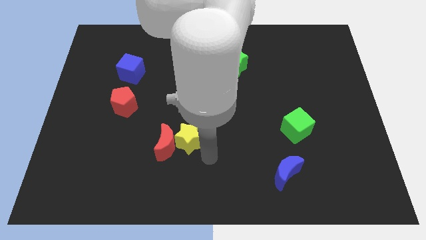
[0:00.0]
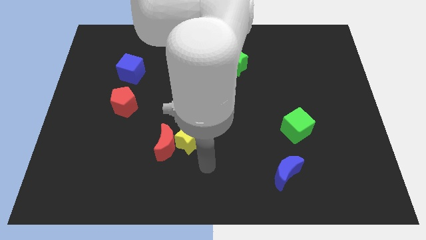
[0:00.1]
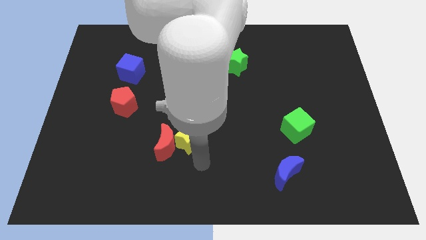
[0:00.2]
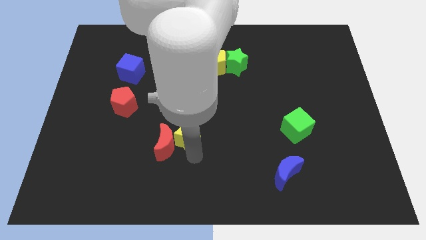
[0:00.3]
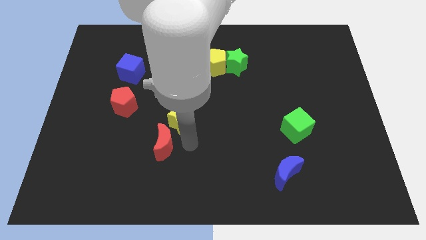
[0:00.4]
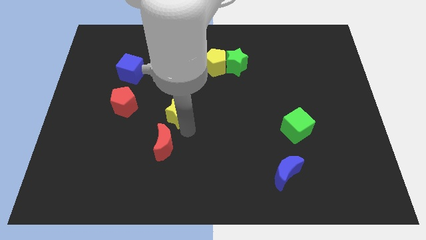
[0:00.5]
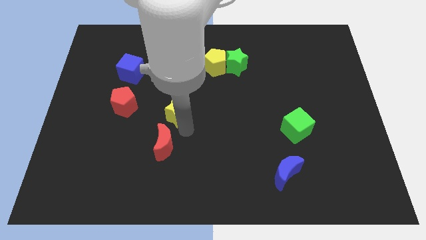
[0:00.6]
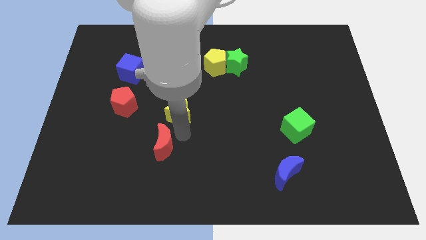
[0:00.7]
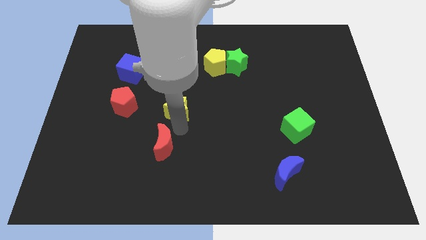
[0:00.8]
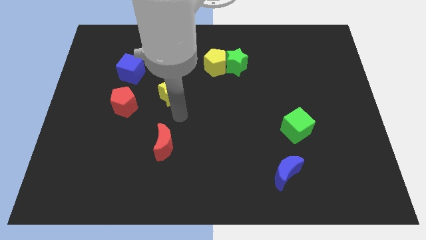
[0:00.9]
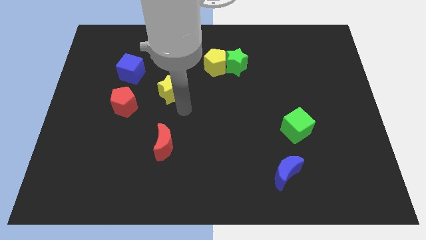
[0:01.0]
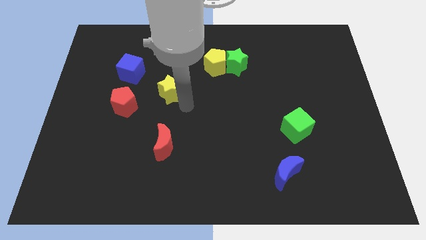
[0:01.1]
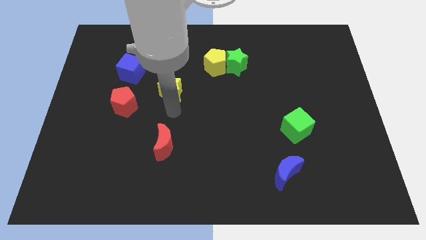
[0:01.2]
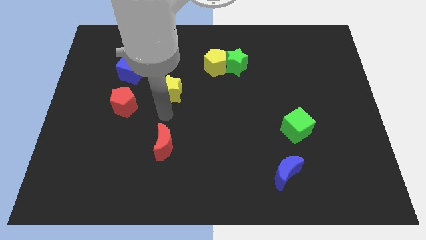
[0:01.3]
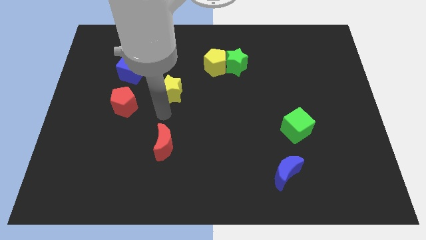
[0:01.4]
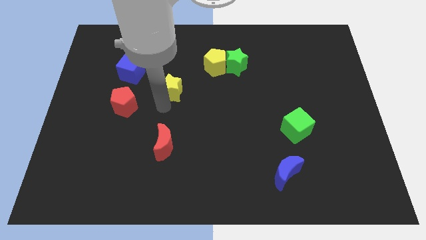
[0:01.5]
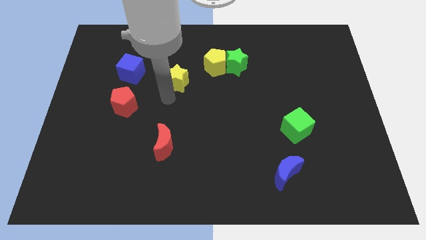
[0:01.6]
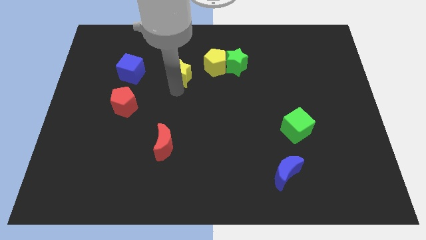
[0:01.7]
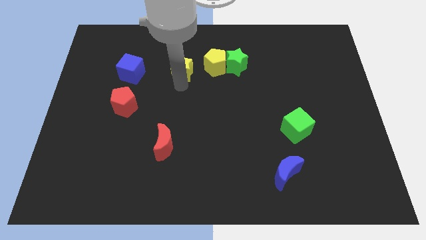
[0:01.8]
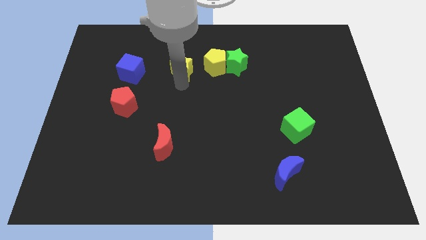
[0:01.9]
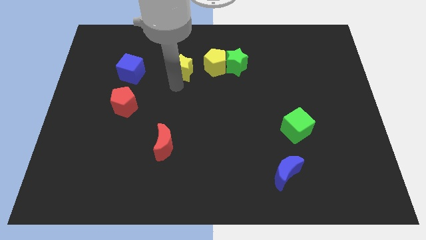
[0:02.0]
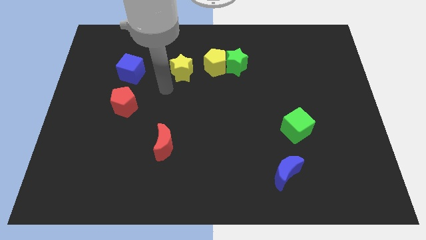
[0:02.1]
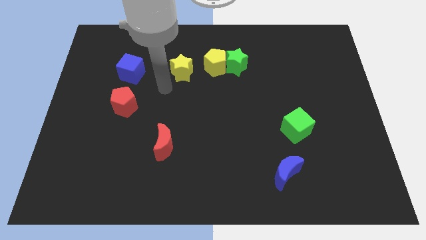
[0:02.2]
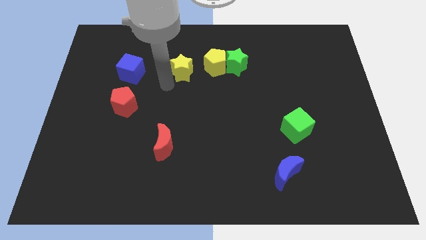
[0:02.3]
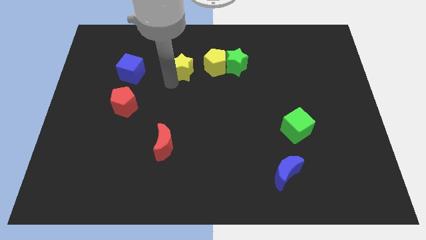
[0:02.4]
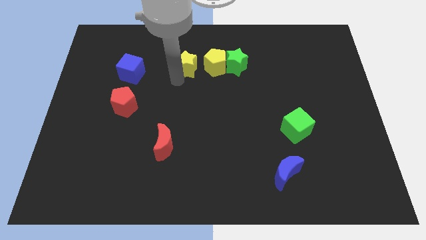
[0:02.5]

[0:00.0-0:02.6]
move yellow star on left side of yellow pentagon

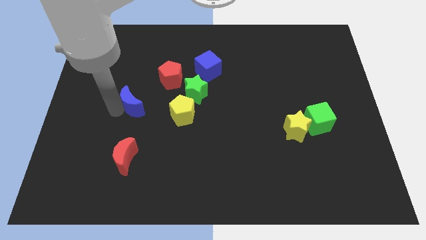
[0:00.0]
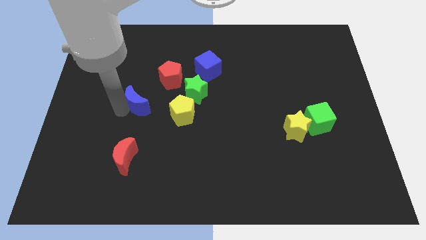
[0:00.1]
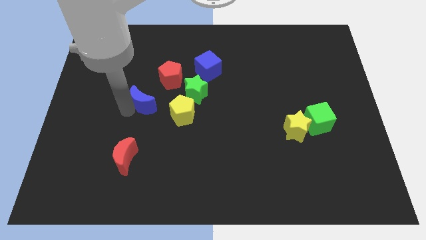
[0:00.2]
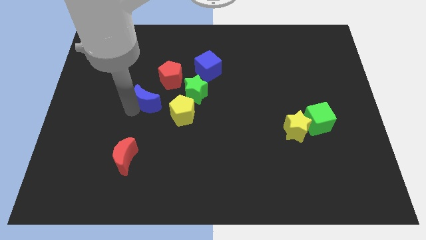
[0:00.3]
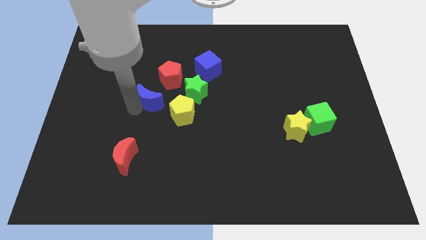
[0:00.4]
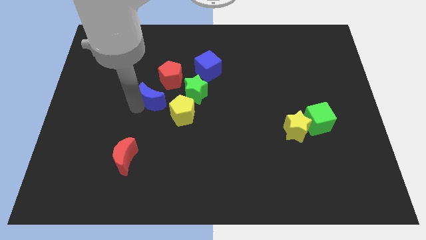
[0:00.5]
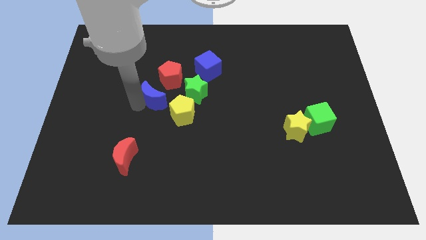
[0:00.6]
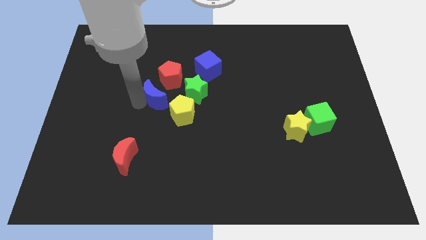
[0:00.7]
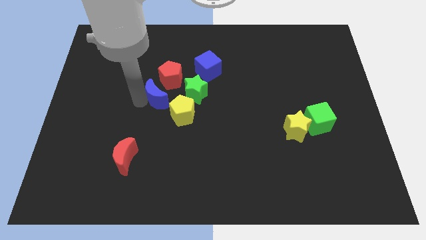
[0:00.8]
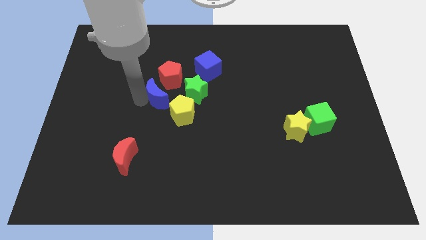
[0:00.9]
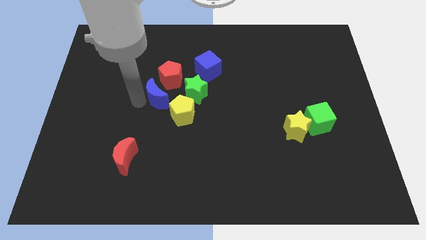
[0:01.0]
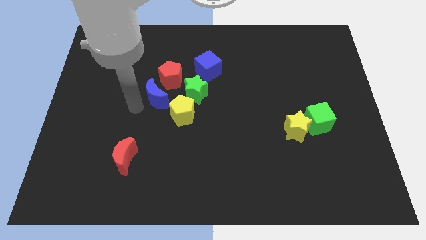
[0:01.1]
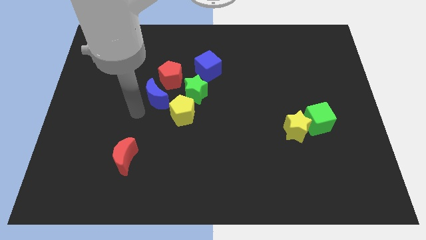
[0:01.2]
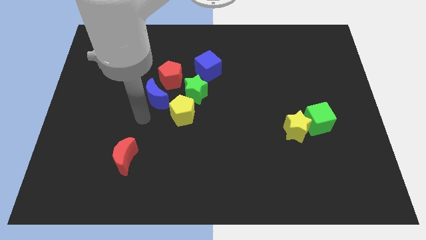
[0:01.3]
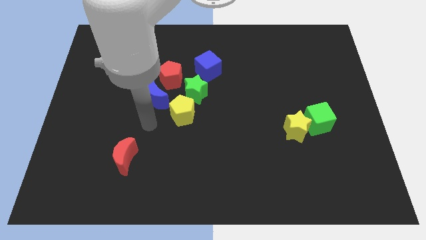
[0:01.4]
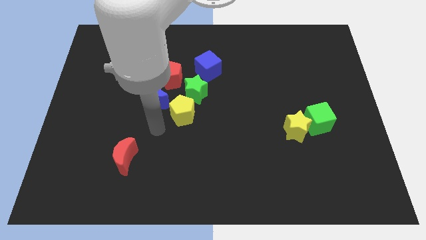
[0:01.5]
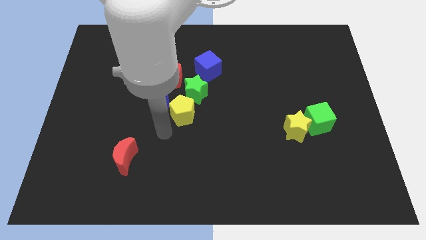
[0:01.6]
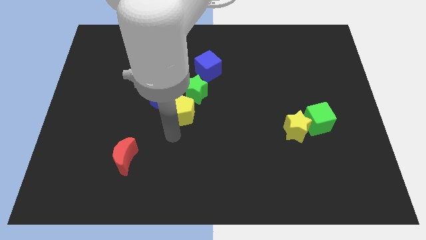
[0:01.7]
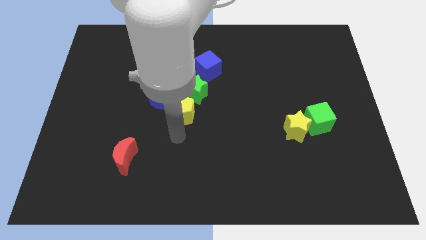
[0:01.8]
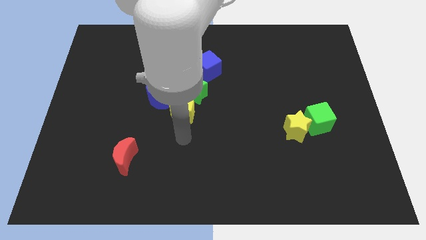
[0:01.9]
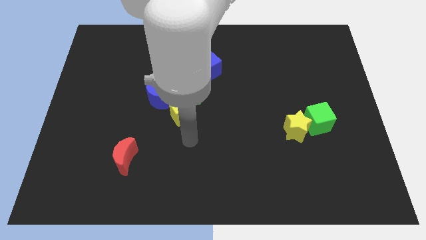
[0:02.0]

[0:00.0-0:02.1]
place the blue moon at the top left of the yellow pentagon

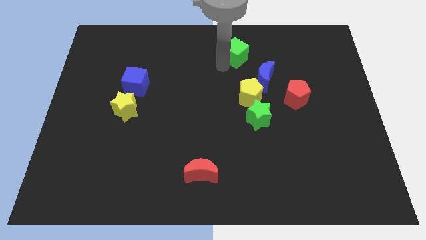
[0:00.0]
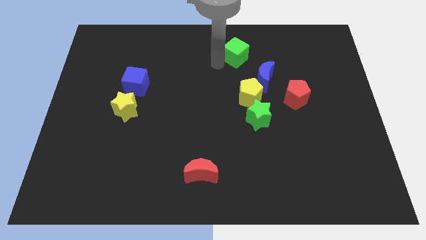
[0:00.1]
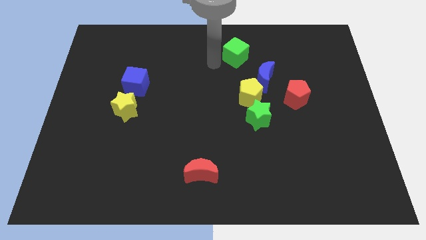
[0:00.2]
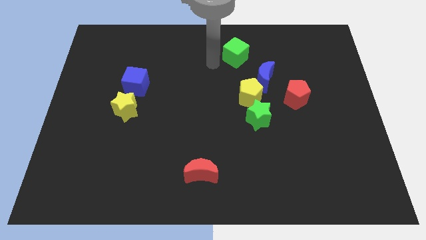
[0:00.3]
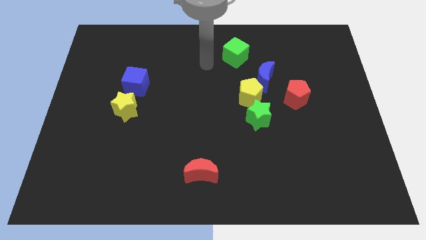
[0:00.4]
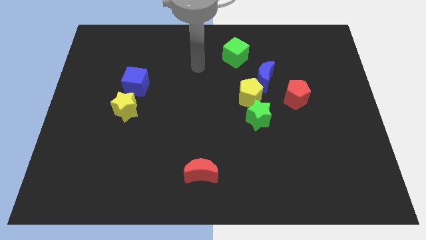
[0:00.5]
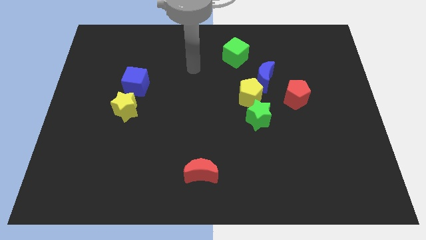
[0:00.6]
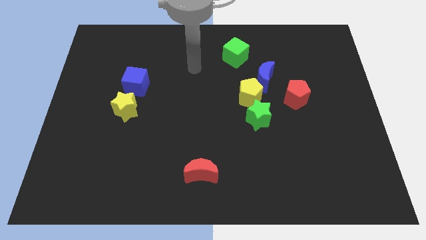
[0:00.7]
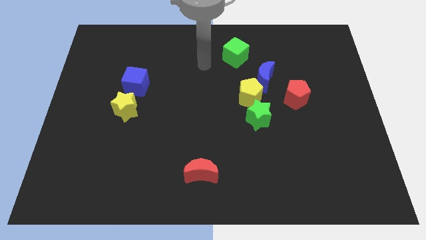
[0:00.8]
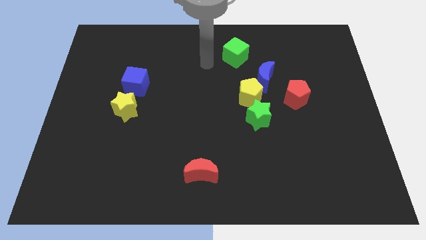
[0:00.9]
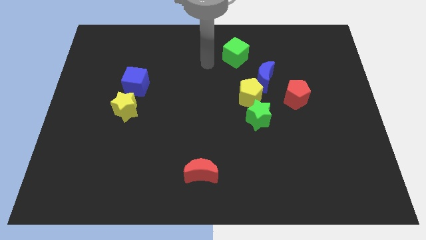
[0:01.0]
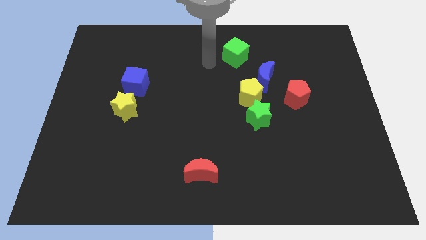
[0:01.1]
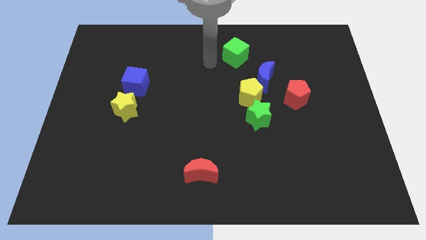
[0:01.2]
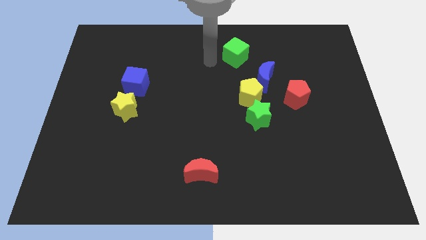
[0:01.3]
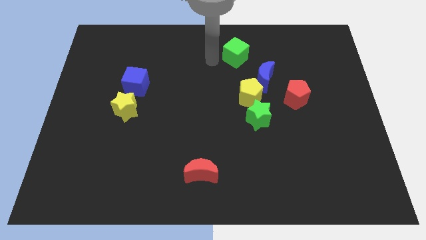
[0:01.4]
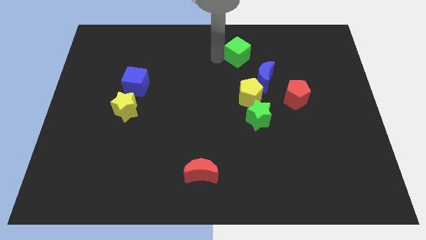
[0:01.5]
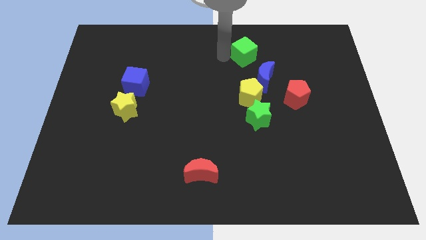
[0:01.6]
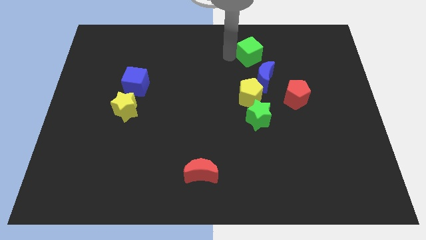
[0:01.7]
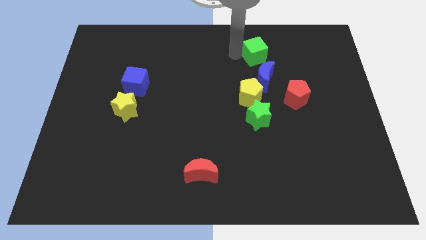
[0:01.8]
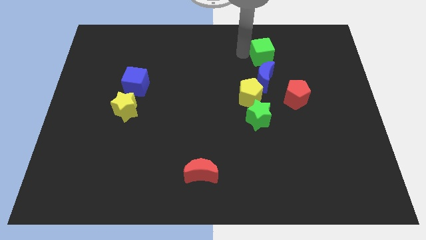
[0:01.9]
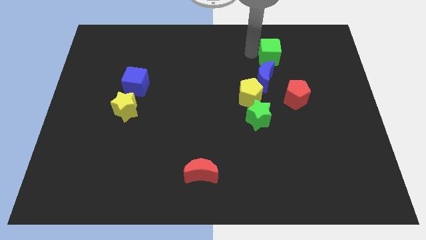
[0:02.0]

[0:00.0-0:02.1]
put the green cube above the blue moon

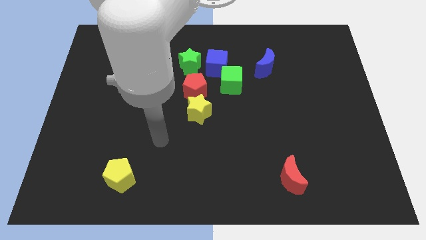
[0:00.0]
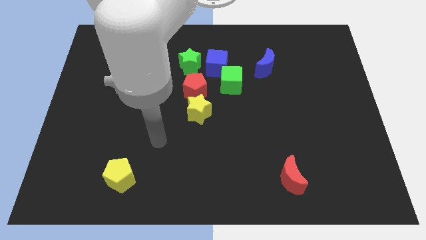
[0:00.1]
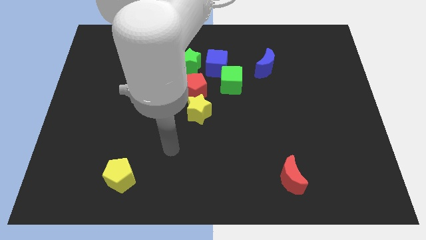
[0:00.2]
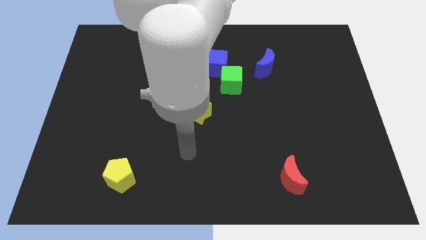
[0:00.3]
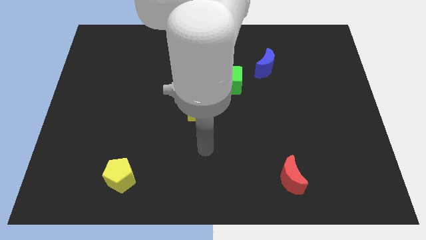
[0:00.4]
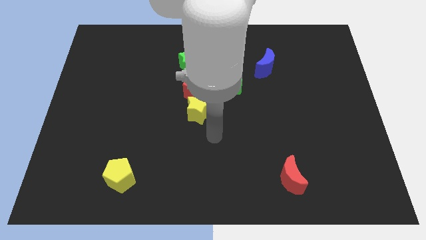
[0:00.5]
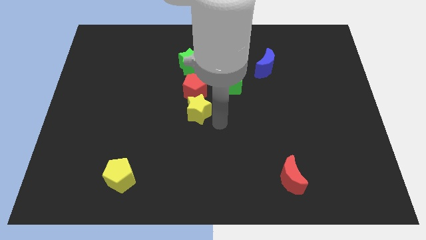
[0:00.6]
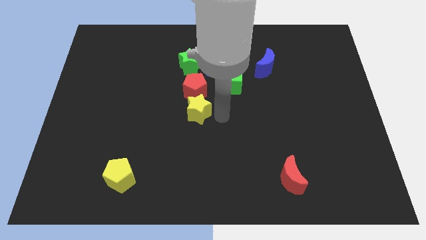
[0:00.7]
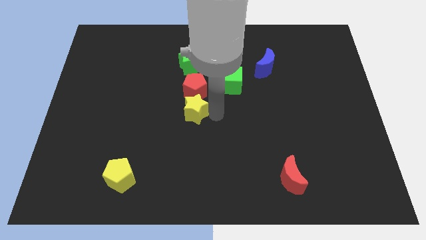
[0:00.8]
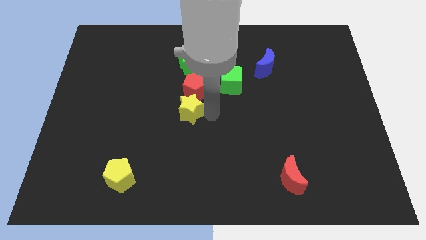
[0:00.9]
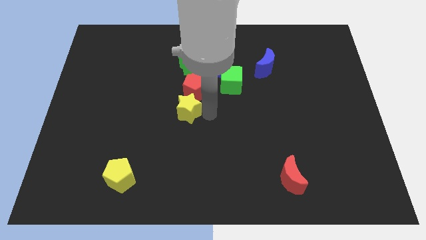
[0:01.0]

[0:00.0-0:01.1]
place the yellow star in the center

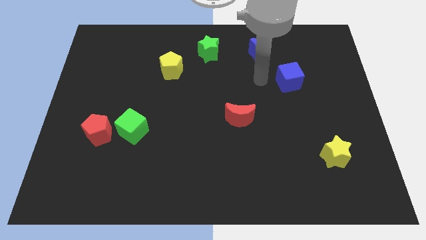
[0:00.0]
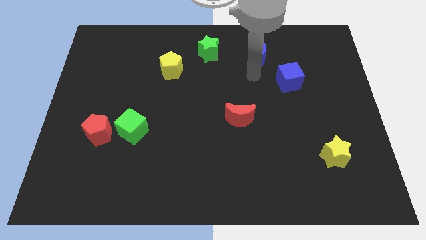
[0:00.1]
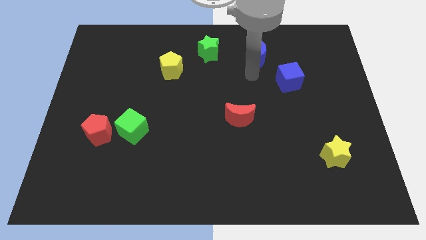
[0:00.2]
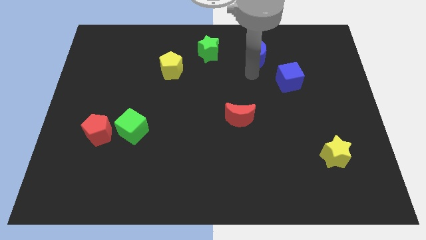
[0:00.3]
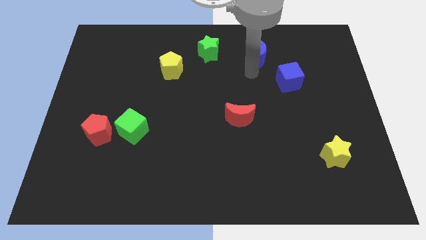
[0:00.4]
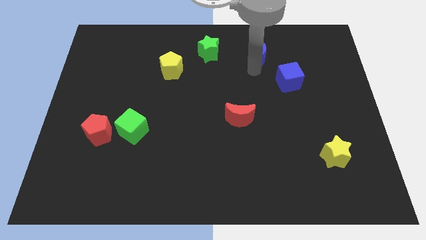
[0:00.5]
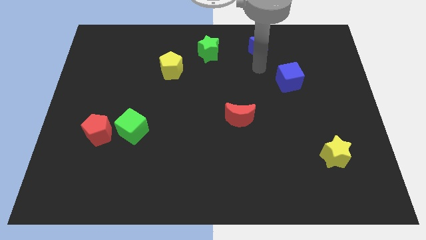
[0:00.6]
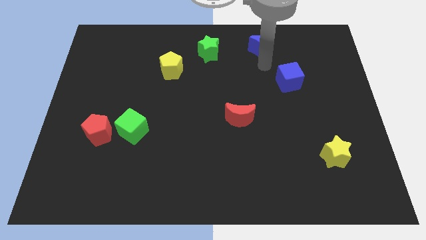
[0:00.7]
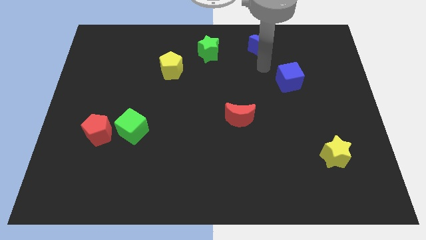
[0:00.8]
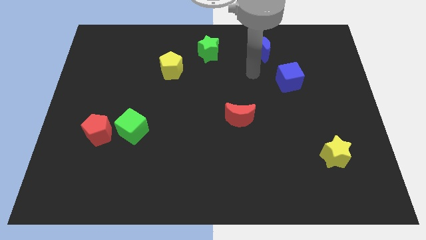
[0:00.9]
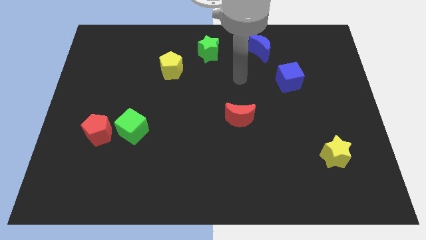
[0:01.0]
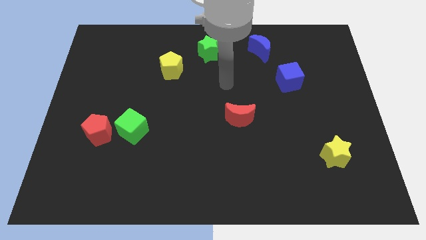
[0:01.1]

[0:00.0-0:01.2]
move the blue crescent towards top center of the board
